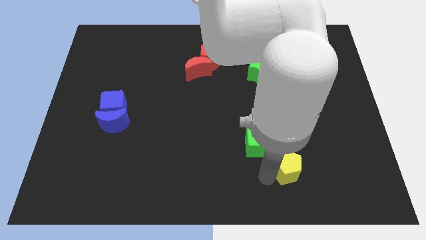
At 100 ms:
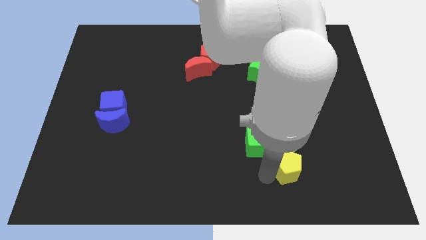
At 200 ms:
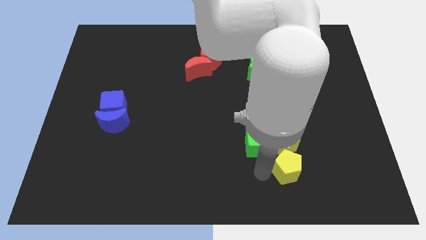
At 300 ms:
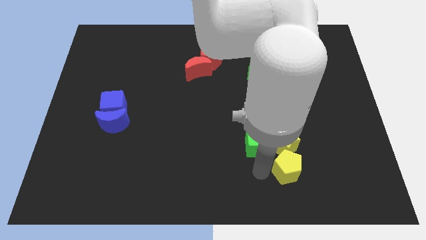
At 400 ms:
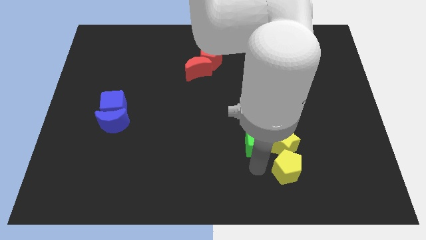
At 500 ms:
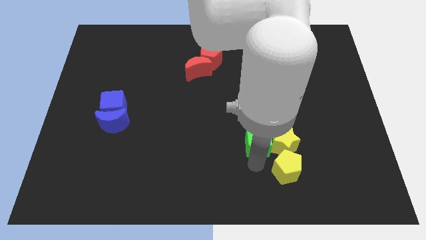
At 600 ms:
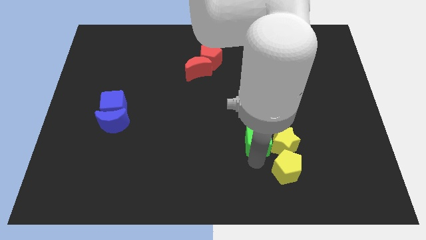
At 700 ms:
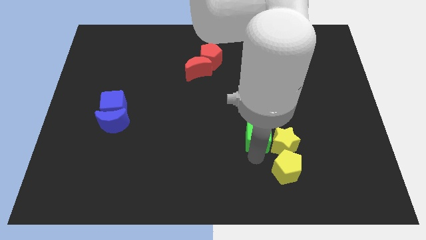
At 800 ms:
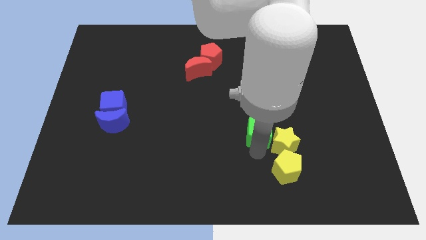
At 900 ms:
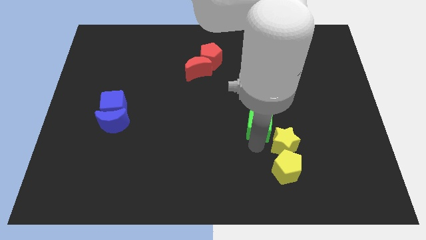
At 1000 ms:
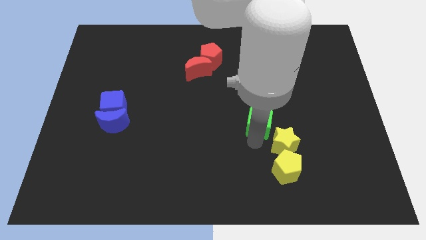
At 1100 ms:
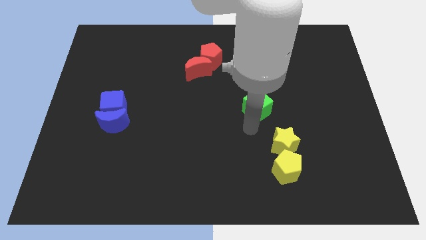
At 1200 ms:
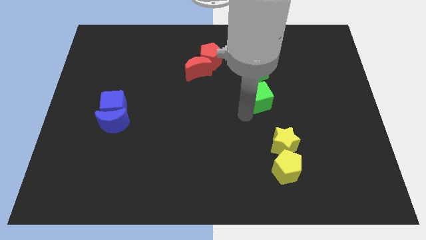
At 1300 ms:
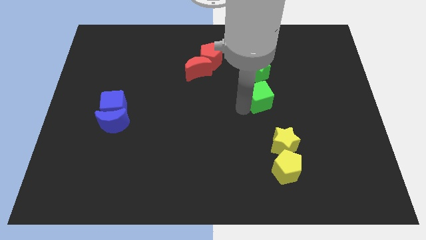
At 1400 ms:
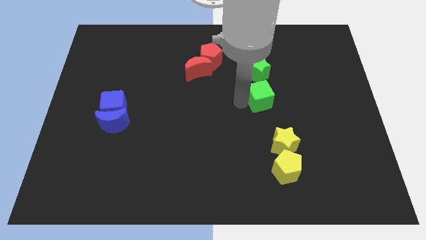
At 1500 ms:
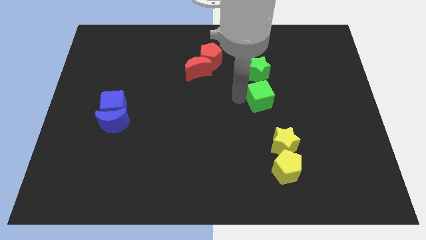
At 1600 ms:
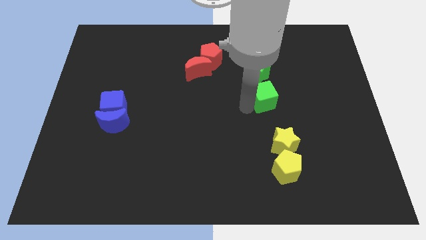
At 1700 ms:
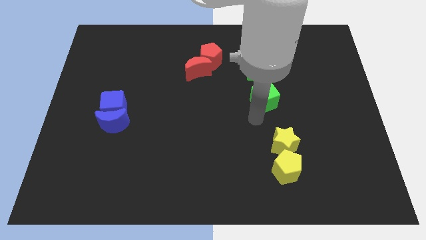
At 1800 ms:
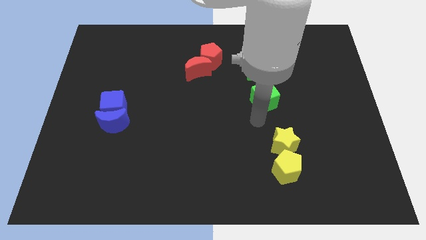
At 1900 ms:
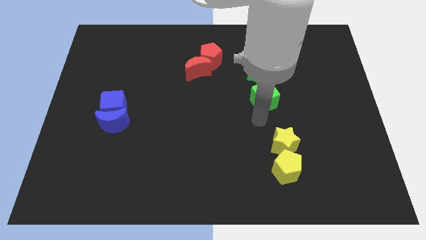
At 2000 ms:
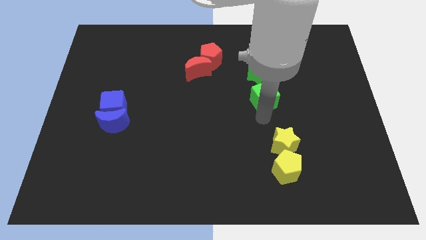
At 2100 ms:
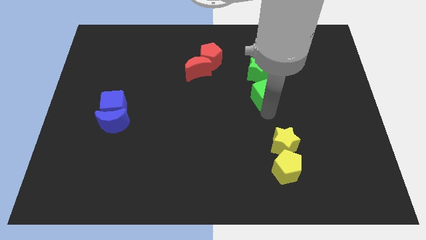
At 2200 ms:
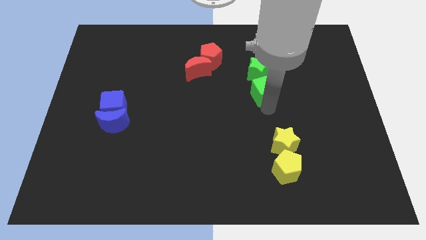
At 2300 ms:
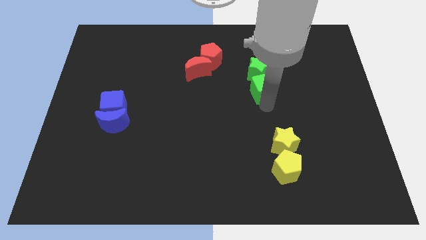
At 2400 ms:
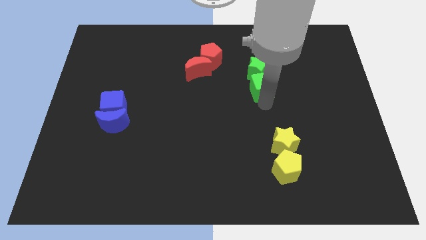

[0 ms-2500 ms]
push the green cube upward

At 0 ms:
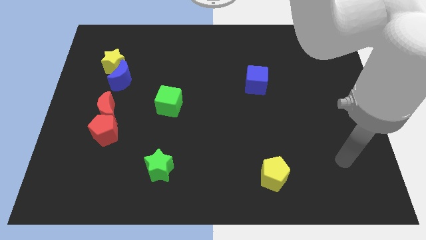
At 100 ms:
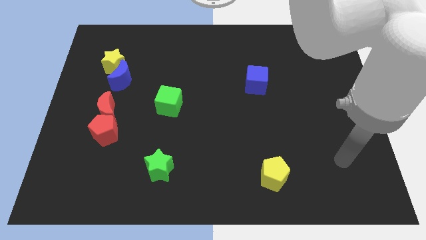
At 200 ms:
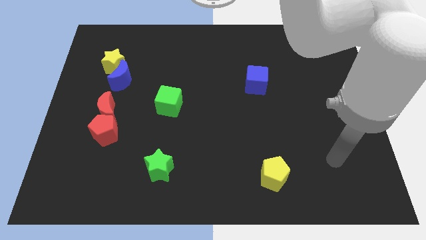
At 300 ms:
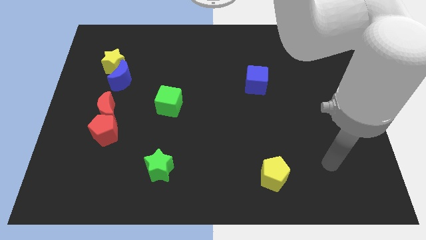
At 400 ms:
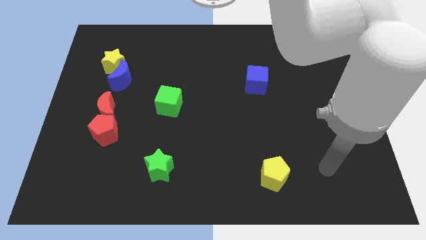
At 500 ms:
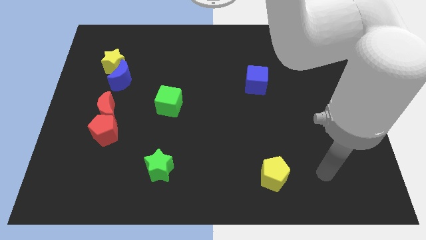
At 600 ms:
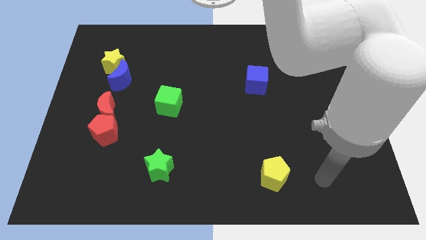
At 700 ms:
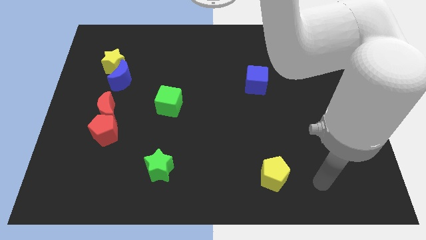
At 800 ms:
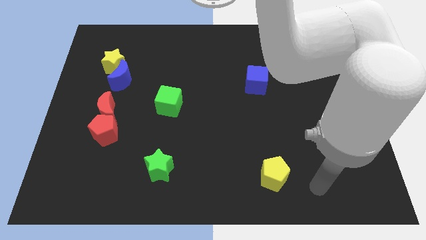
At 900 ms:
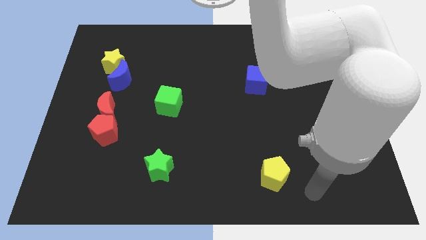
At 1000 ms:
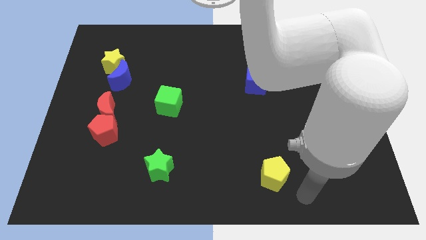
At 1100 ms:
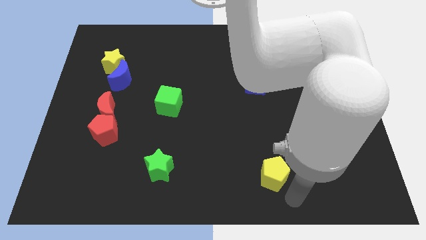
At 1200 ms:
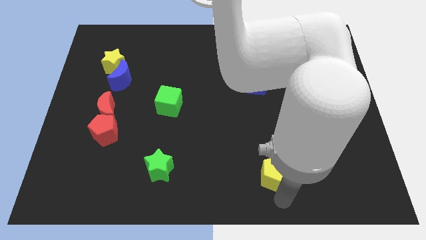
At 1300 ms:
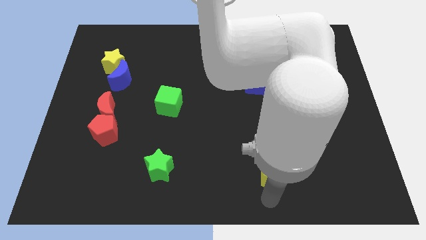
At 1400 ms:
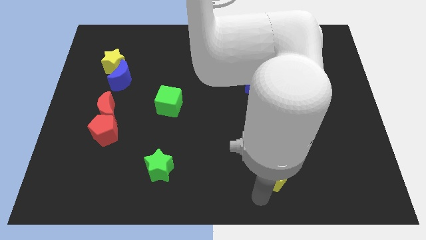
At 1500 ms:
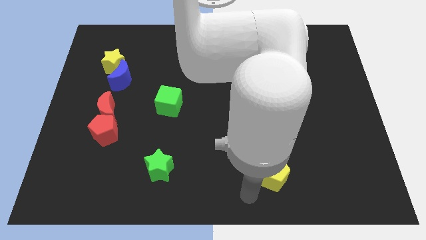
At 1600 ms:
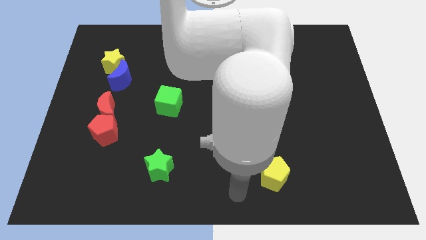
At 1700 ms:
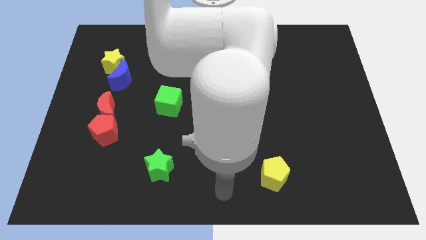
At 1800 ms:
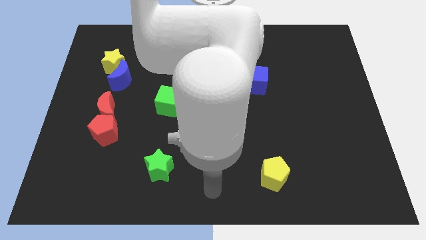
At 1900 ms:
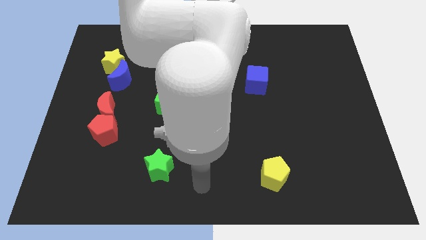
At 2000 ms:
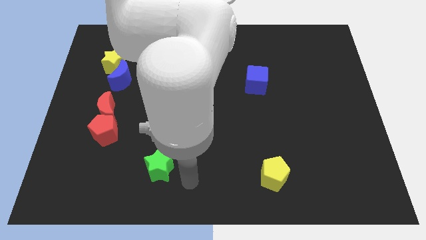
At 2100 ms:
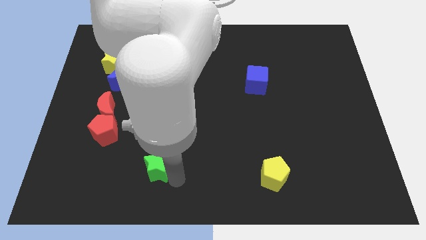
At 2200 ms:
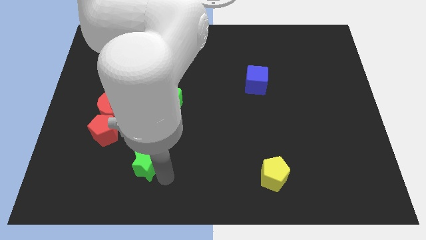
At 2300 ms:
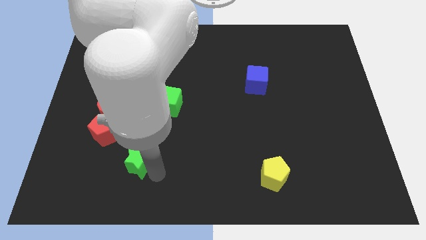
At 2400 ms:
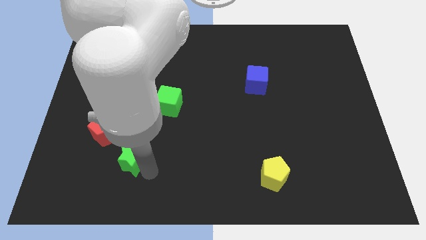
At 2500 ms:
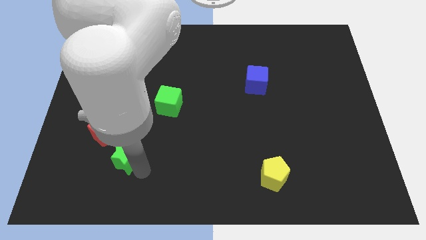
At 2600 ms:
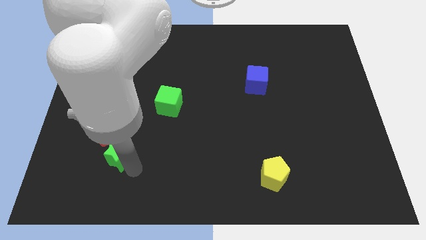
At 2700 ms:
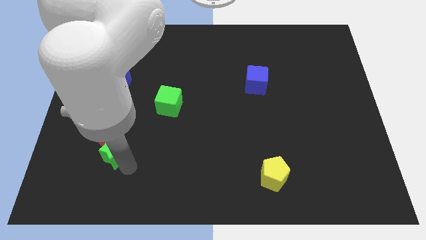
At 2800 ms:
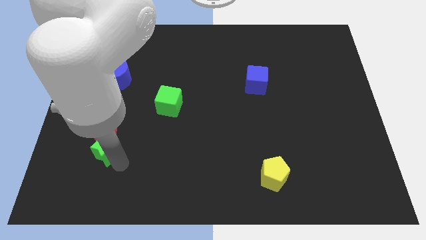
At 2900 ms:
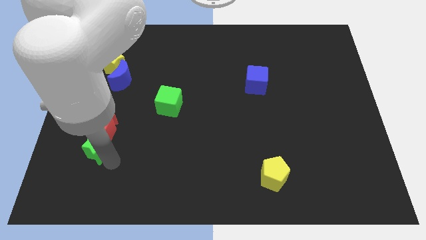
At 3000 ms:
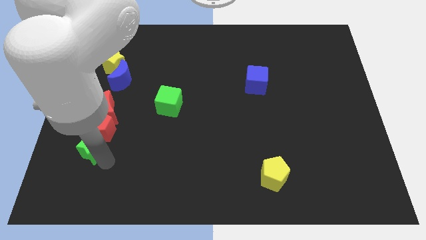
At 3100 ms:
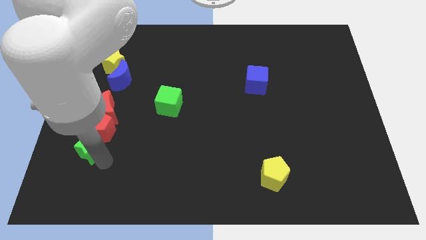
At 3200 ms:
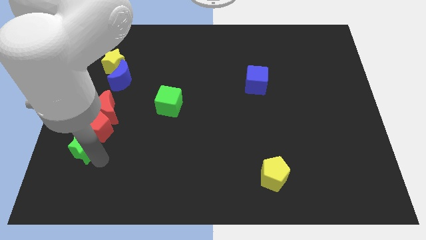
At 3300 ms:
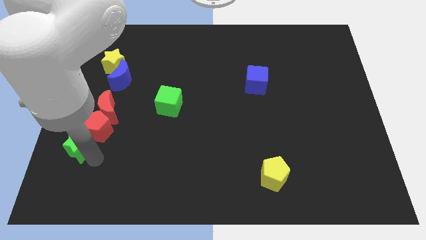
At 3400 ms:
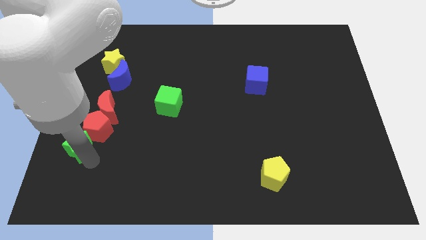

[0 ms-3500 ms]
move the green star to the bottom of the red pentagon

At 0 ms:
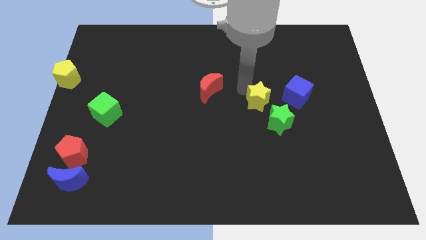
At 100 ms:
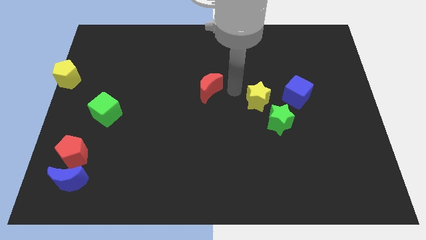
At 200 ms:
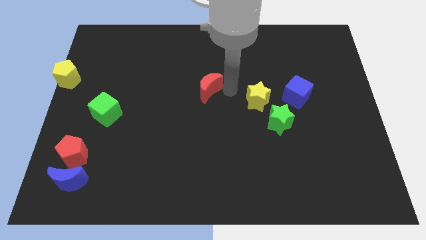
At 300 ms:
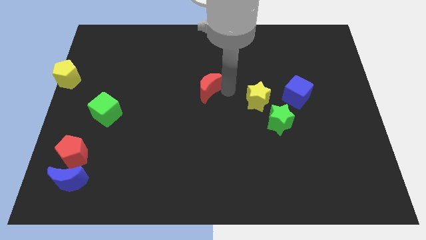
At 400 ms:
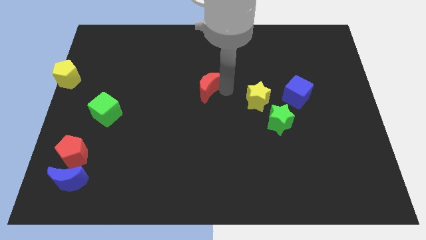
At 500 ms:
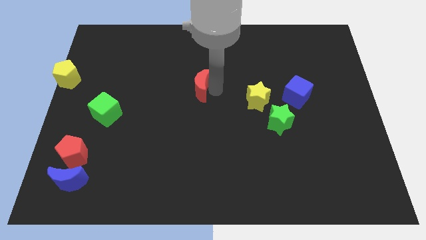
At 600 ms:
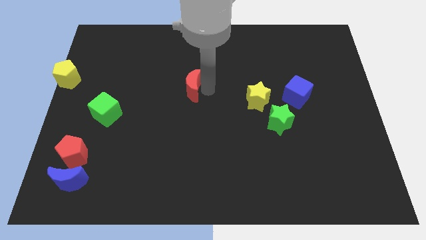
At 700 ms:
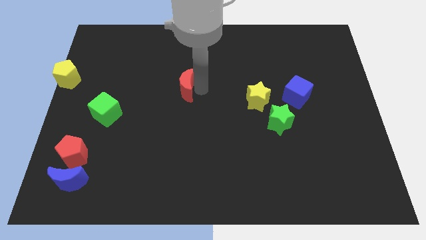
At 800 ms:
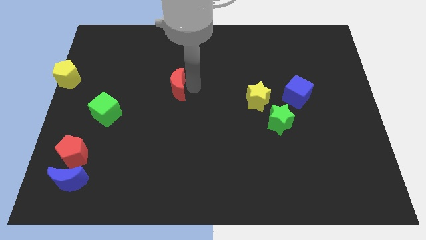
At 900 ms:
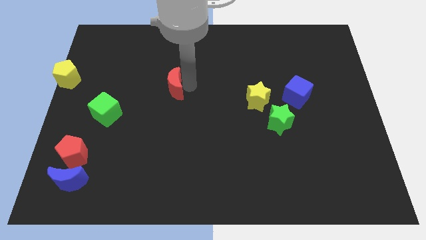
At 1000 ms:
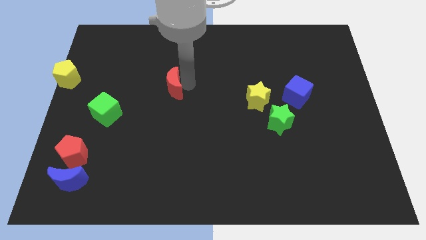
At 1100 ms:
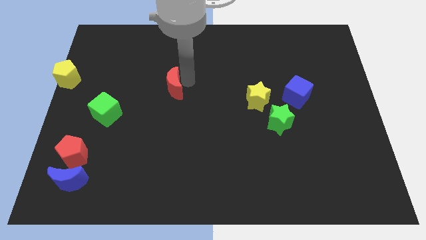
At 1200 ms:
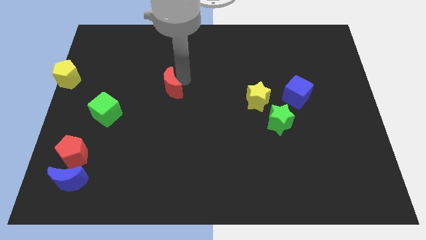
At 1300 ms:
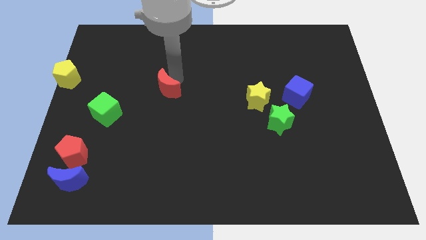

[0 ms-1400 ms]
move the red crescent slightly to the left

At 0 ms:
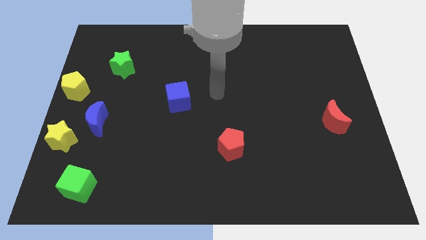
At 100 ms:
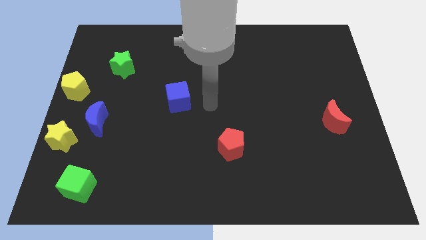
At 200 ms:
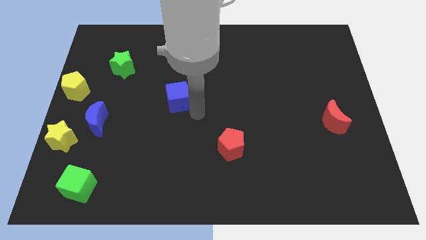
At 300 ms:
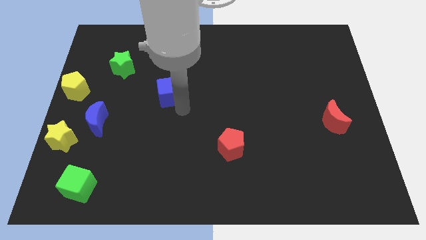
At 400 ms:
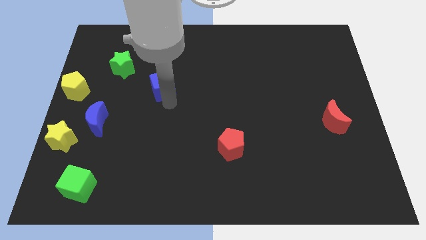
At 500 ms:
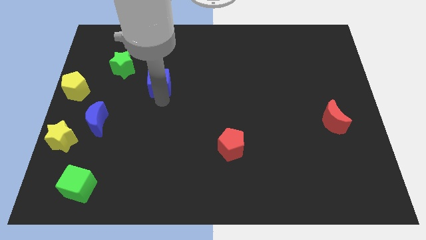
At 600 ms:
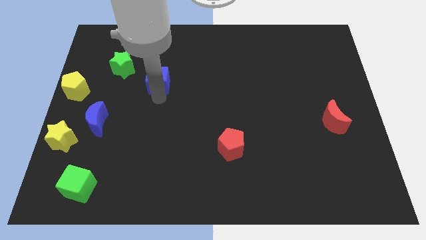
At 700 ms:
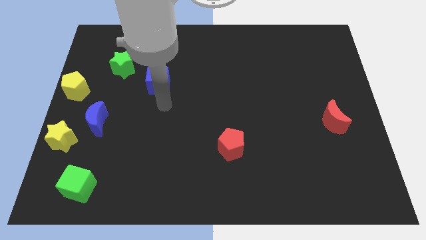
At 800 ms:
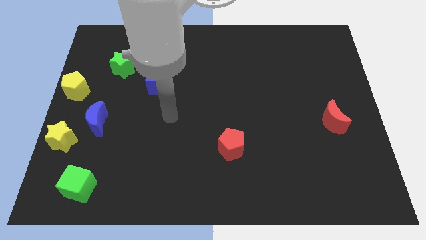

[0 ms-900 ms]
slightly push the blue cube diagonally upwards of the board

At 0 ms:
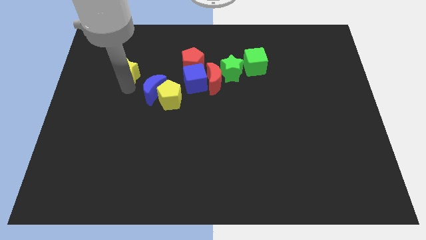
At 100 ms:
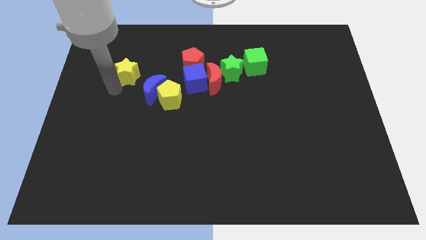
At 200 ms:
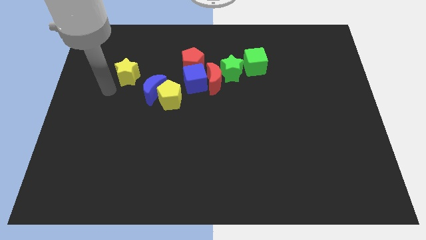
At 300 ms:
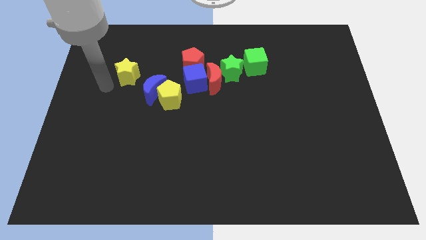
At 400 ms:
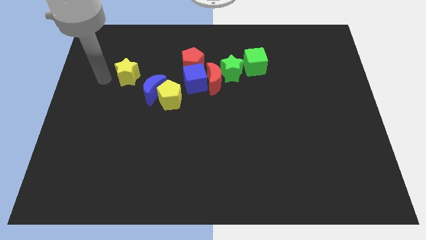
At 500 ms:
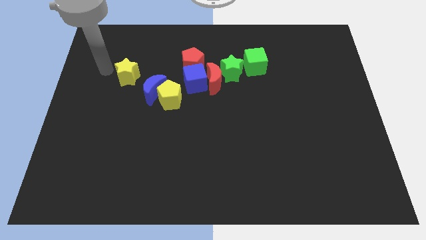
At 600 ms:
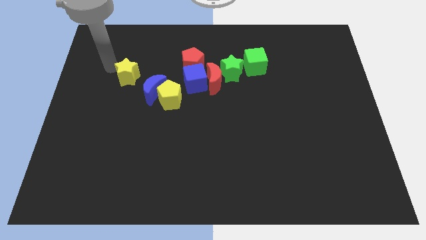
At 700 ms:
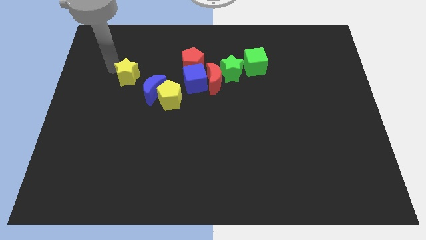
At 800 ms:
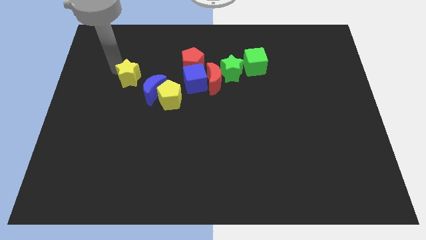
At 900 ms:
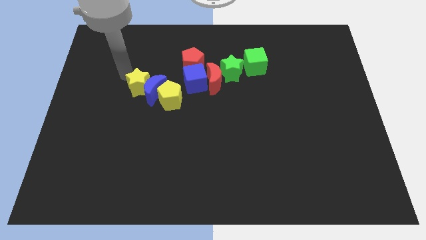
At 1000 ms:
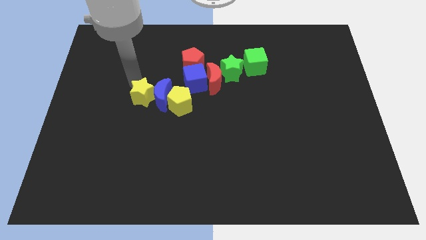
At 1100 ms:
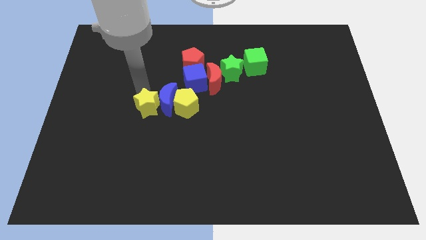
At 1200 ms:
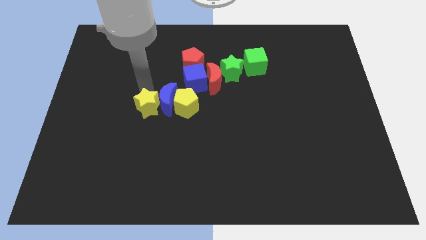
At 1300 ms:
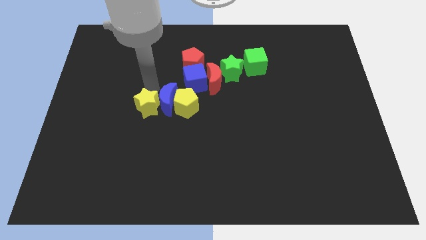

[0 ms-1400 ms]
push yellow star into the blue moon
